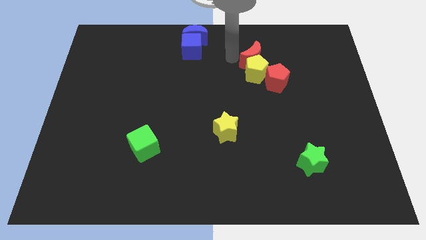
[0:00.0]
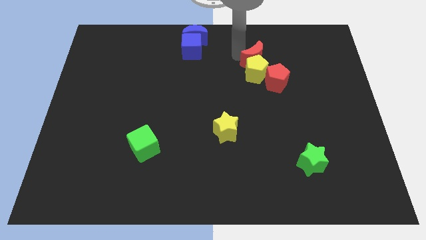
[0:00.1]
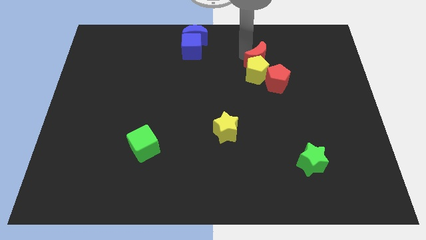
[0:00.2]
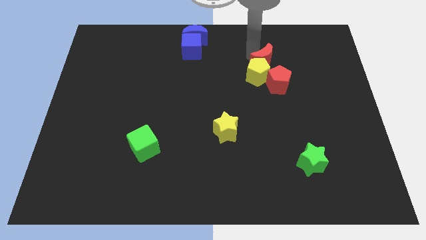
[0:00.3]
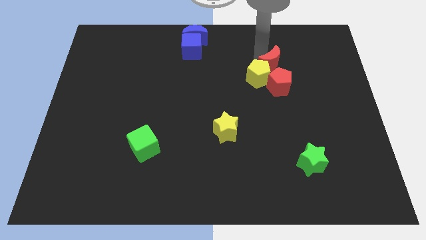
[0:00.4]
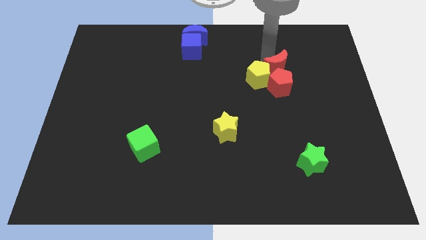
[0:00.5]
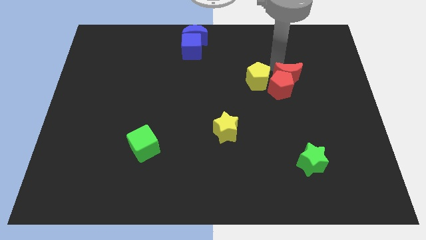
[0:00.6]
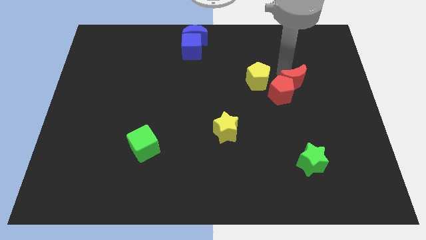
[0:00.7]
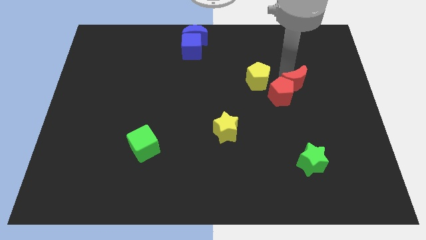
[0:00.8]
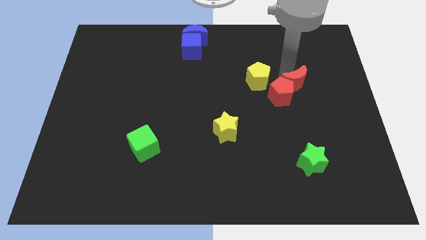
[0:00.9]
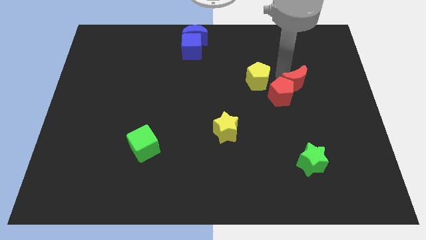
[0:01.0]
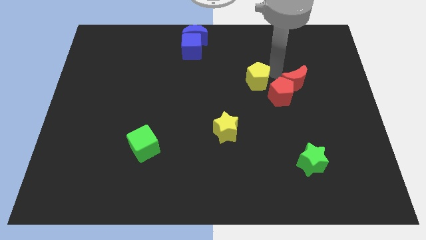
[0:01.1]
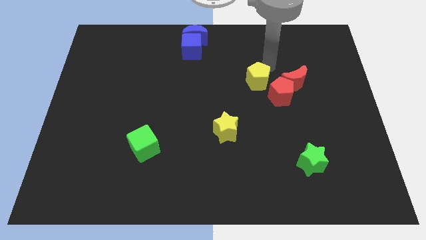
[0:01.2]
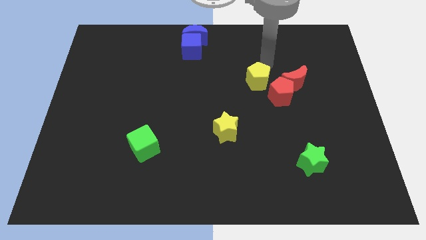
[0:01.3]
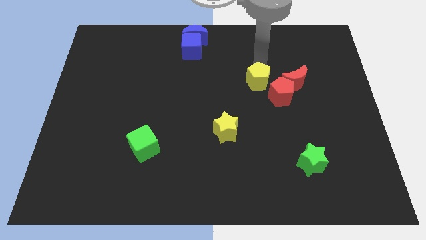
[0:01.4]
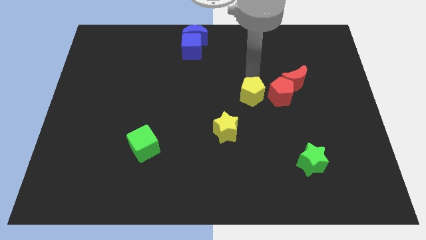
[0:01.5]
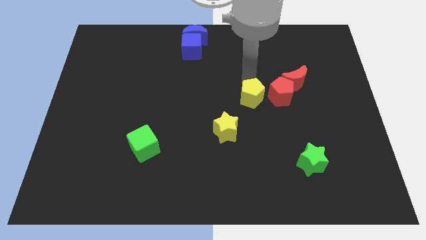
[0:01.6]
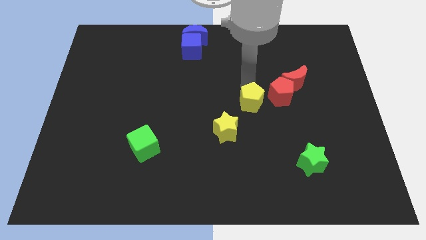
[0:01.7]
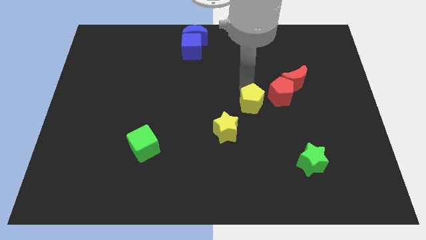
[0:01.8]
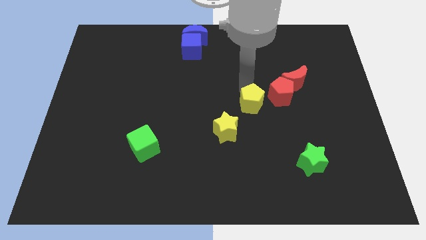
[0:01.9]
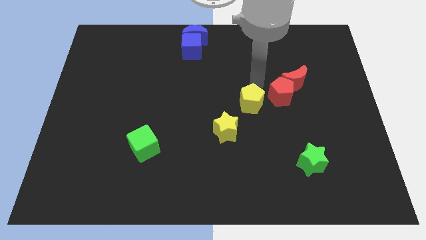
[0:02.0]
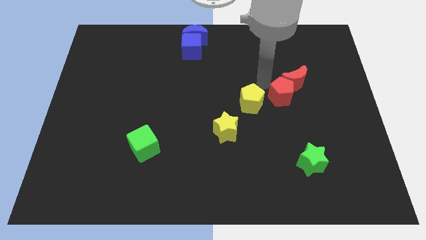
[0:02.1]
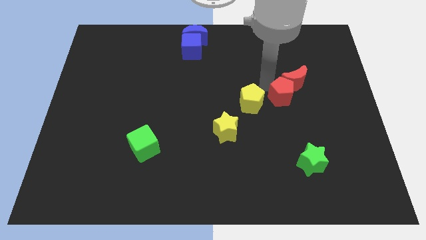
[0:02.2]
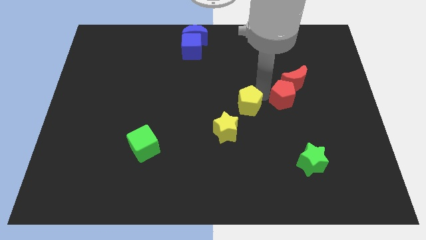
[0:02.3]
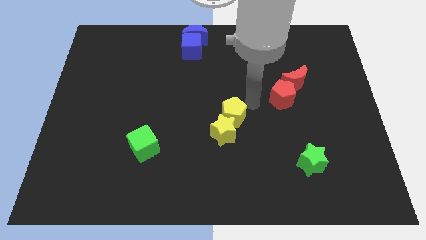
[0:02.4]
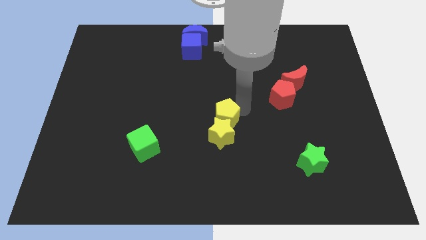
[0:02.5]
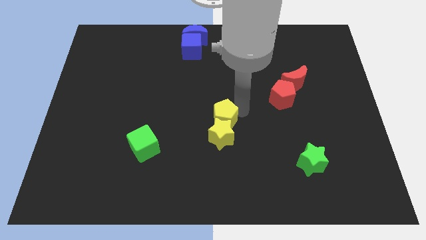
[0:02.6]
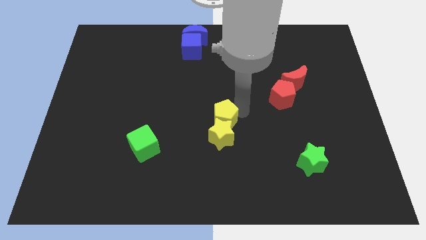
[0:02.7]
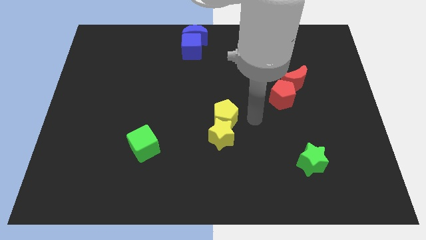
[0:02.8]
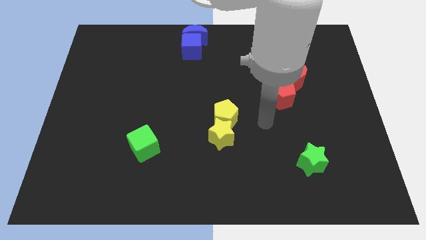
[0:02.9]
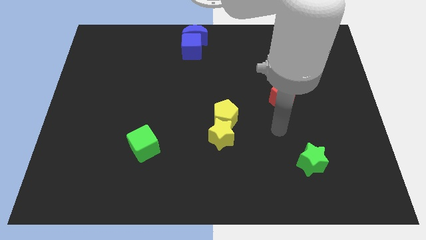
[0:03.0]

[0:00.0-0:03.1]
move the red blocks and the yellow blocks away from each other

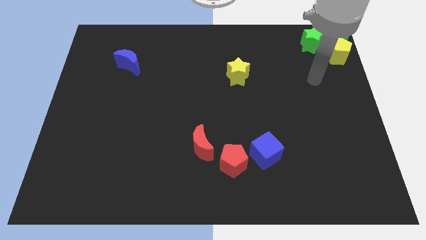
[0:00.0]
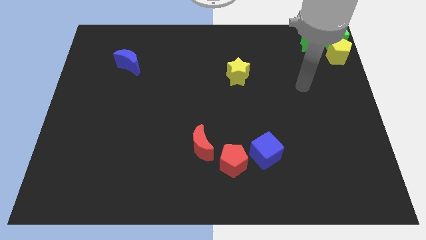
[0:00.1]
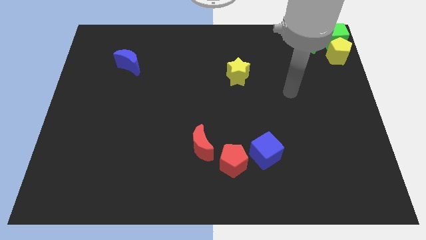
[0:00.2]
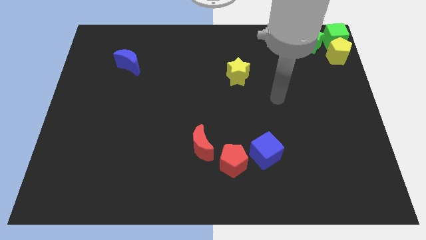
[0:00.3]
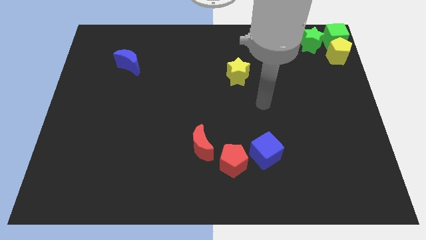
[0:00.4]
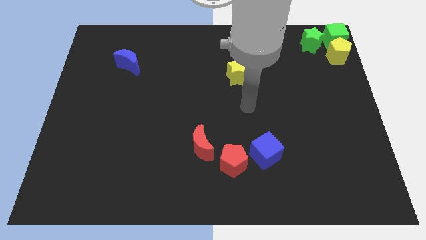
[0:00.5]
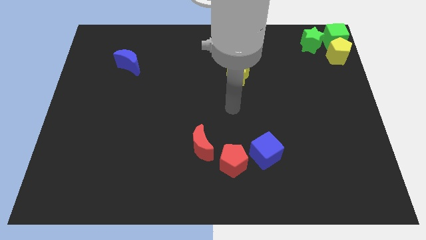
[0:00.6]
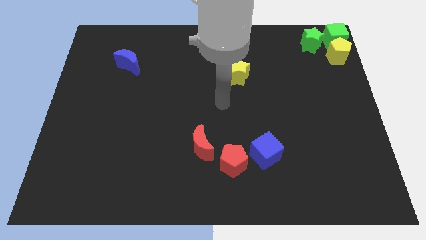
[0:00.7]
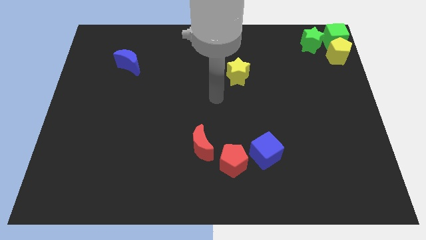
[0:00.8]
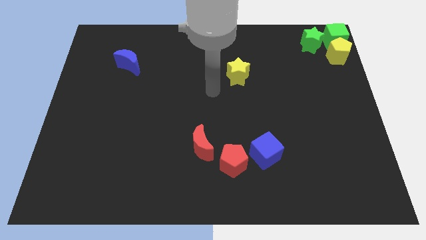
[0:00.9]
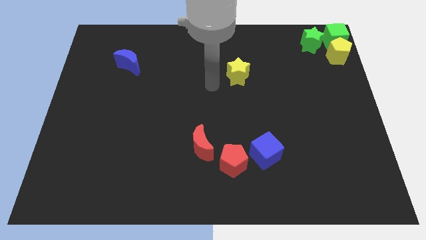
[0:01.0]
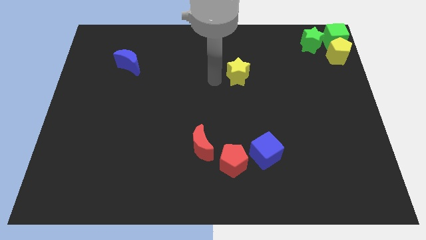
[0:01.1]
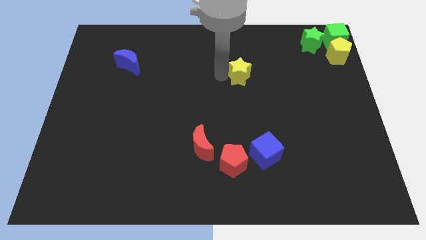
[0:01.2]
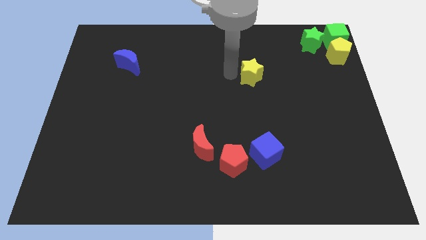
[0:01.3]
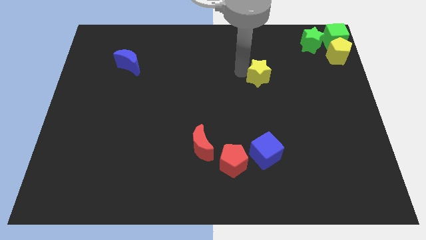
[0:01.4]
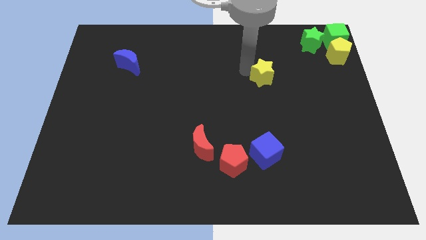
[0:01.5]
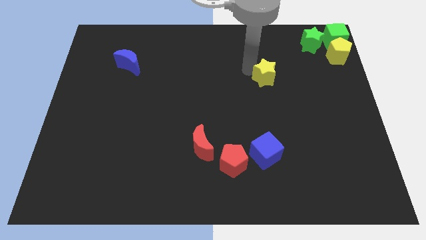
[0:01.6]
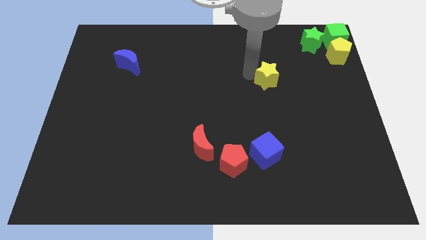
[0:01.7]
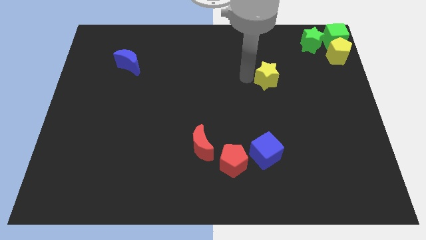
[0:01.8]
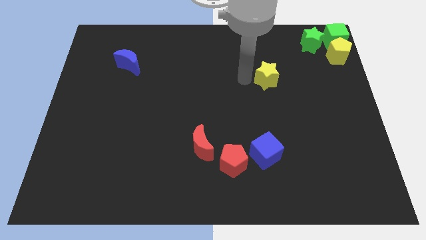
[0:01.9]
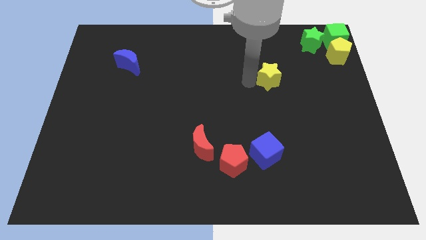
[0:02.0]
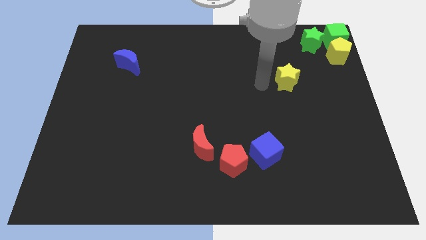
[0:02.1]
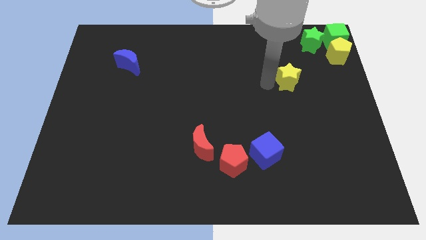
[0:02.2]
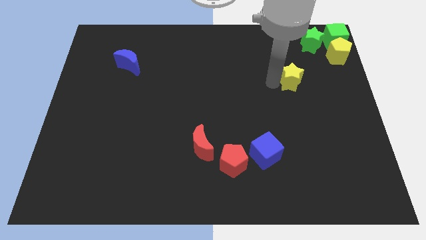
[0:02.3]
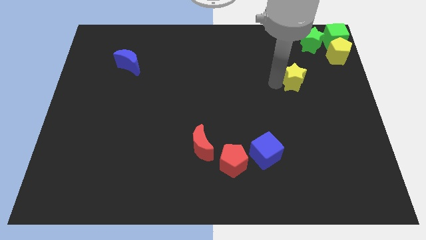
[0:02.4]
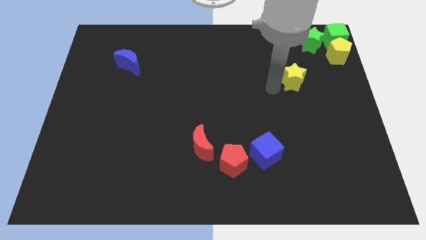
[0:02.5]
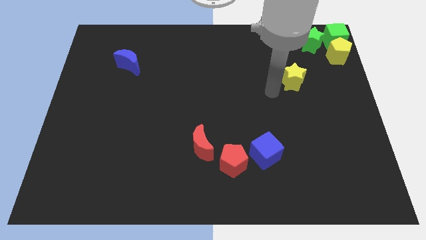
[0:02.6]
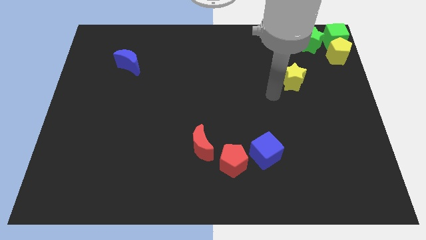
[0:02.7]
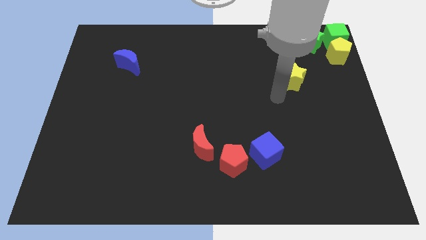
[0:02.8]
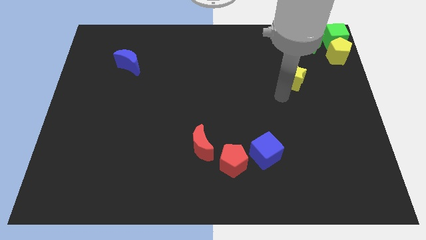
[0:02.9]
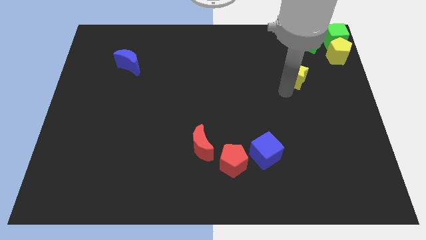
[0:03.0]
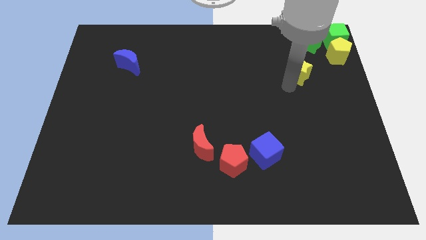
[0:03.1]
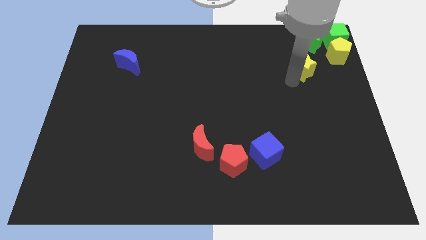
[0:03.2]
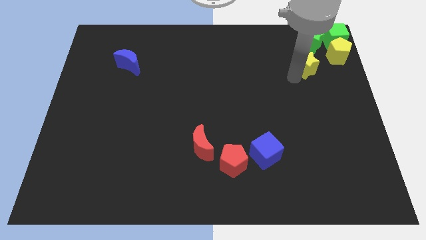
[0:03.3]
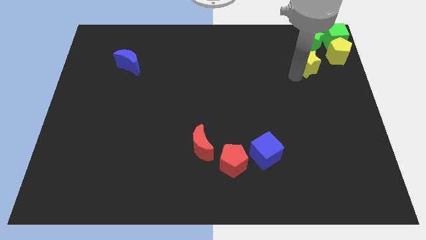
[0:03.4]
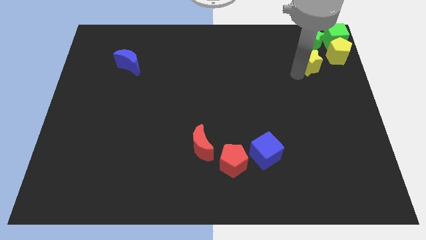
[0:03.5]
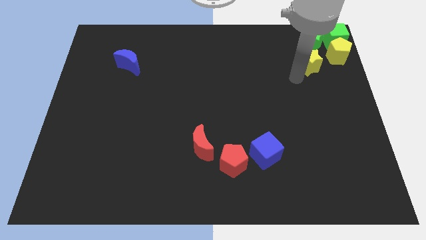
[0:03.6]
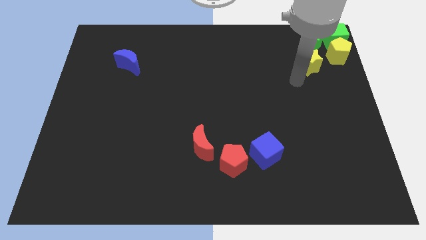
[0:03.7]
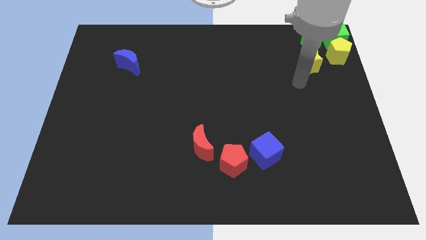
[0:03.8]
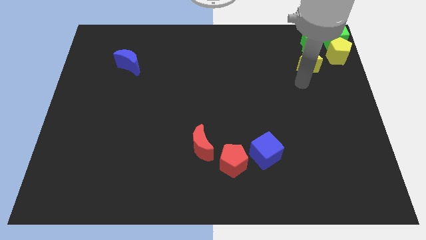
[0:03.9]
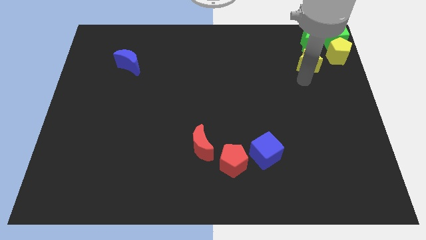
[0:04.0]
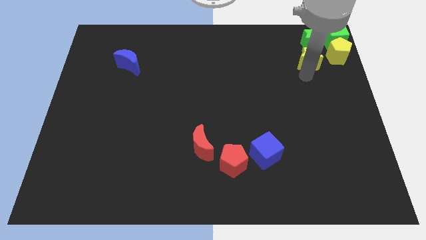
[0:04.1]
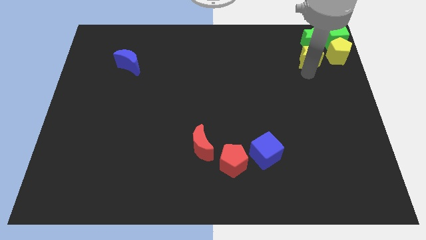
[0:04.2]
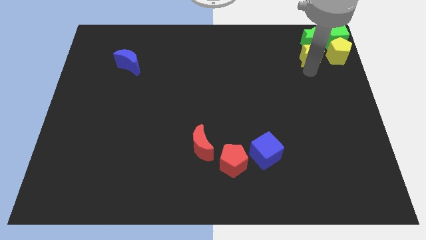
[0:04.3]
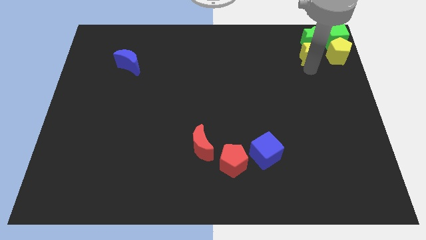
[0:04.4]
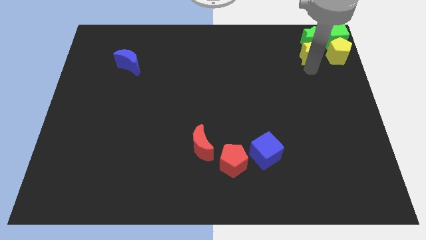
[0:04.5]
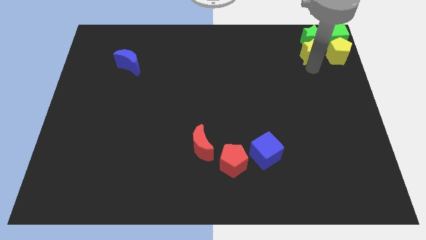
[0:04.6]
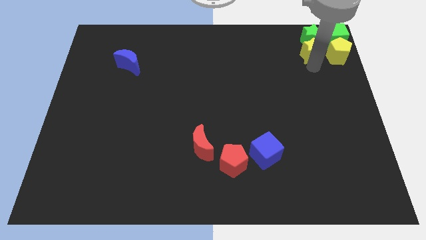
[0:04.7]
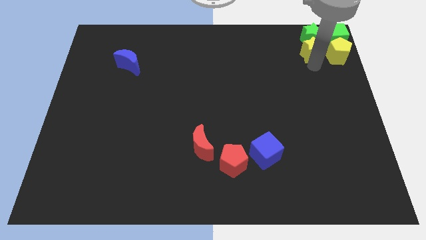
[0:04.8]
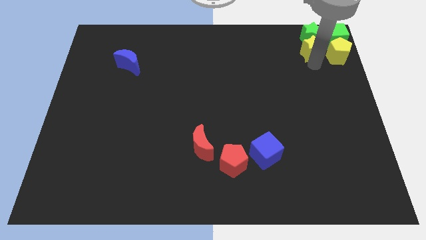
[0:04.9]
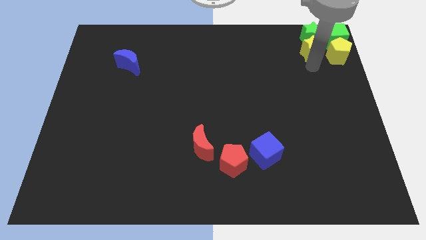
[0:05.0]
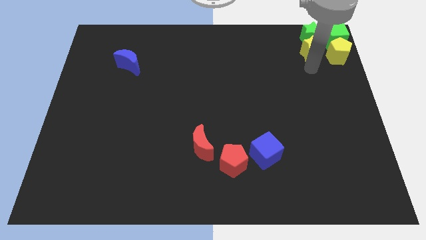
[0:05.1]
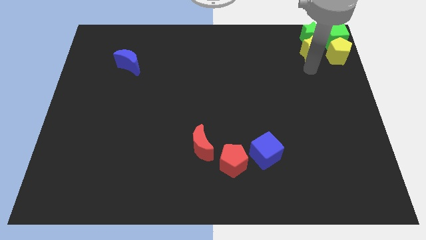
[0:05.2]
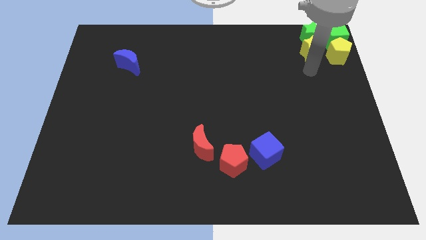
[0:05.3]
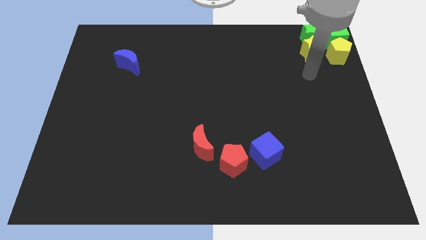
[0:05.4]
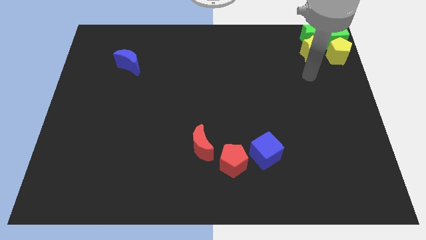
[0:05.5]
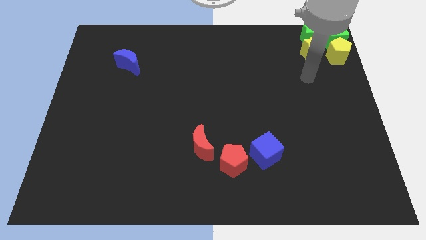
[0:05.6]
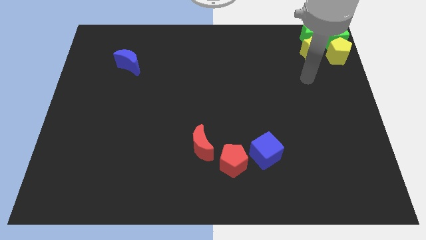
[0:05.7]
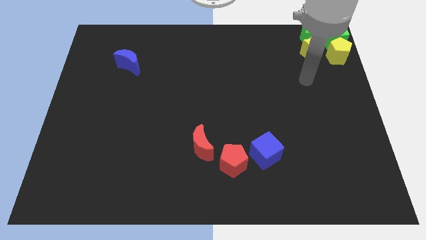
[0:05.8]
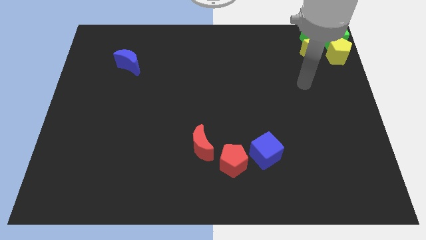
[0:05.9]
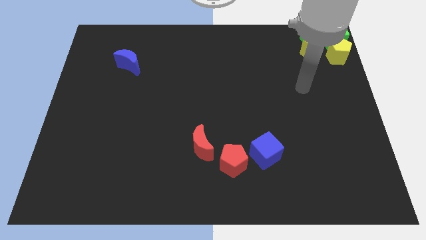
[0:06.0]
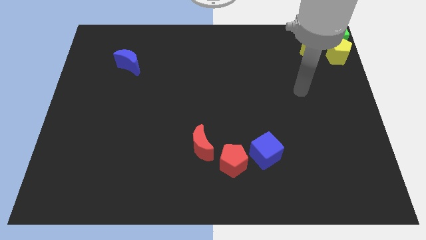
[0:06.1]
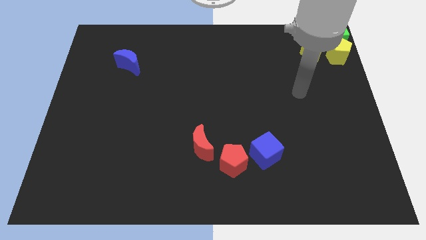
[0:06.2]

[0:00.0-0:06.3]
push the yellow star into the green star
